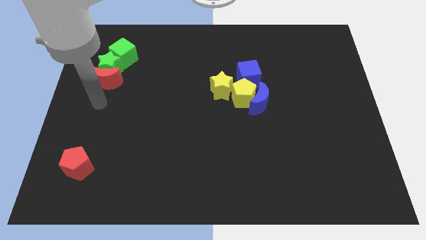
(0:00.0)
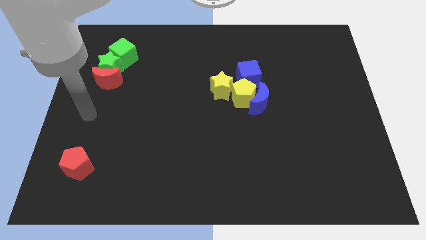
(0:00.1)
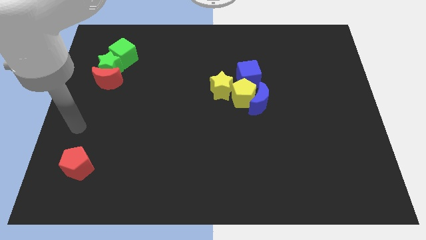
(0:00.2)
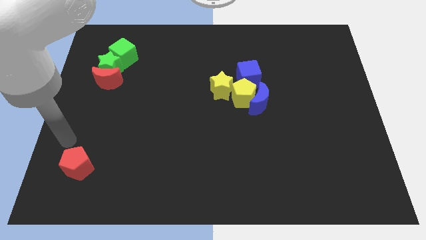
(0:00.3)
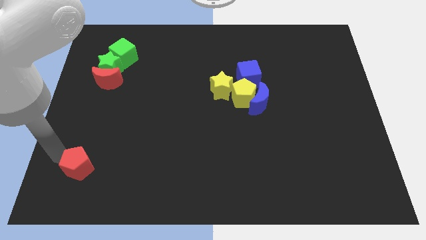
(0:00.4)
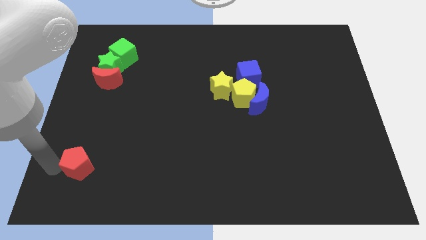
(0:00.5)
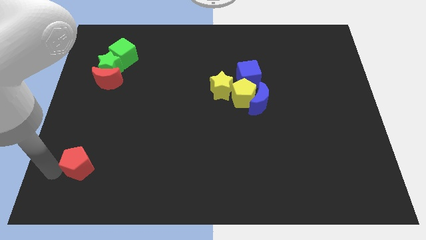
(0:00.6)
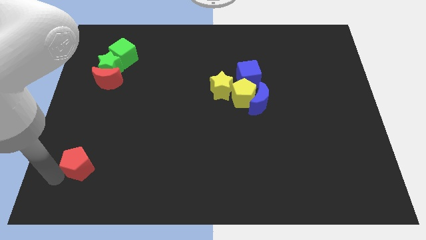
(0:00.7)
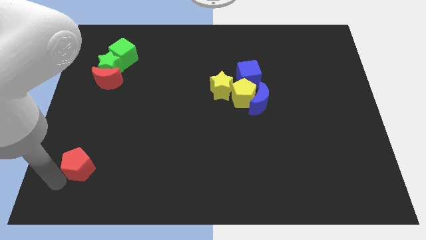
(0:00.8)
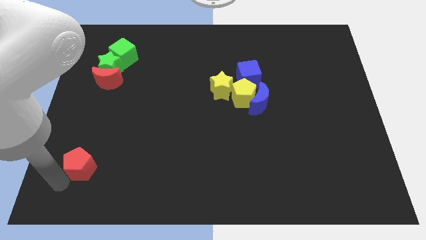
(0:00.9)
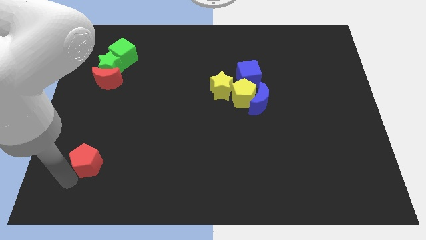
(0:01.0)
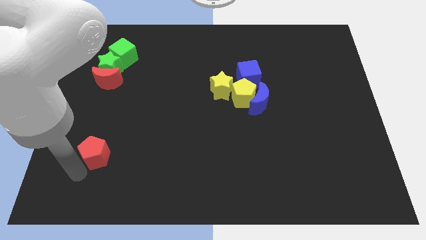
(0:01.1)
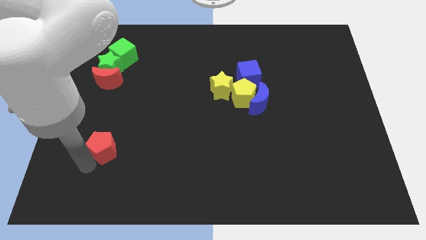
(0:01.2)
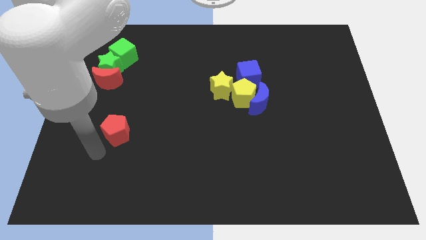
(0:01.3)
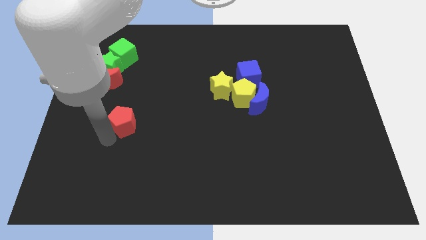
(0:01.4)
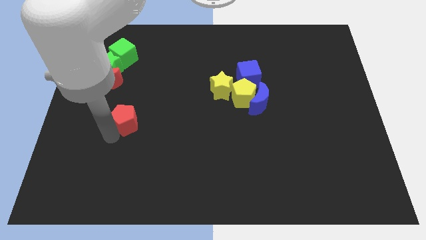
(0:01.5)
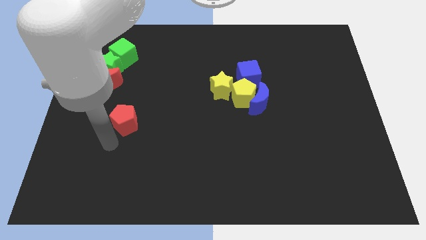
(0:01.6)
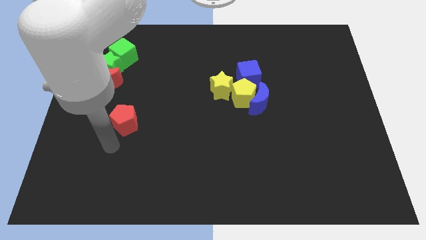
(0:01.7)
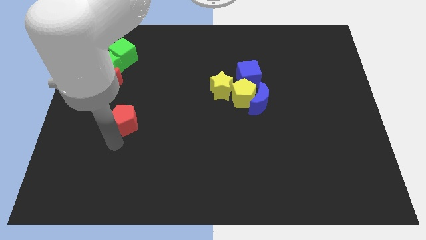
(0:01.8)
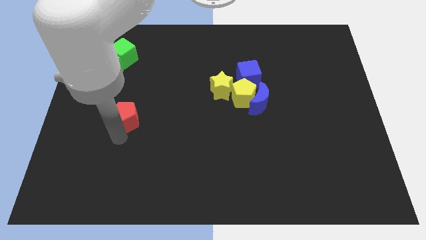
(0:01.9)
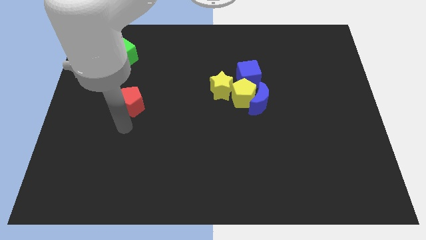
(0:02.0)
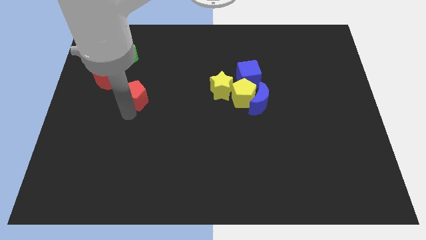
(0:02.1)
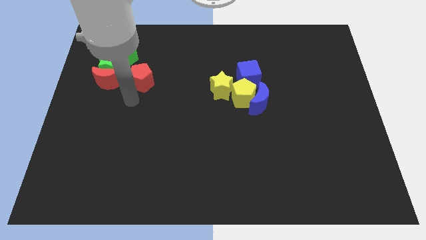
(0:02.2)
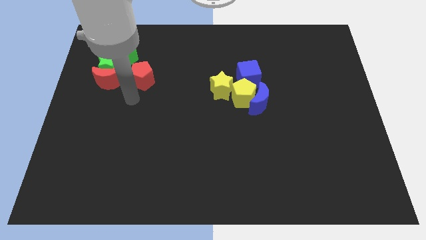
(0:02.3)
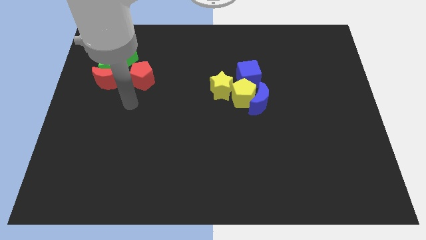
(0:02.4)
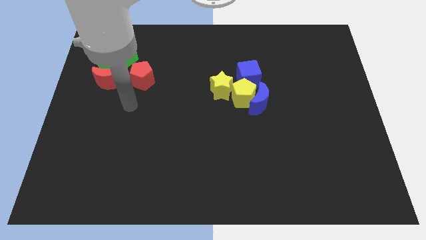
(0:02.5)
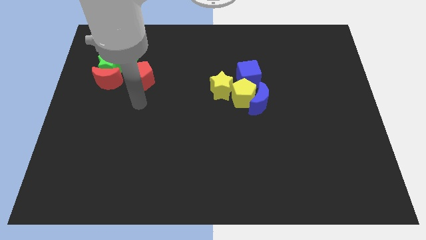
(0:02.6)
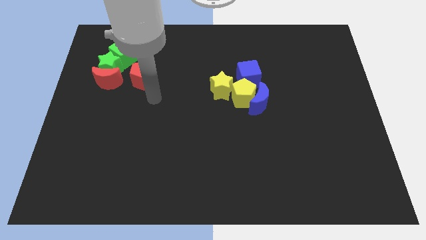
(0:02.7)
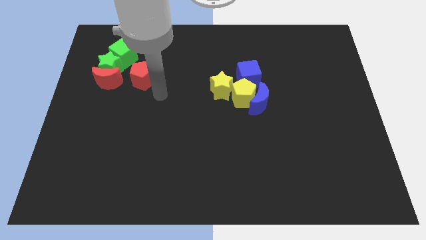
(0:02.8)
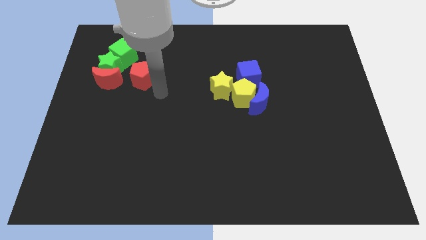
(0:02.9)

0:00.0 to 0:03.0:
place the red pentagon to the right side of the red moon

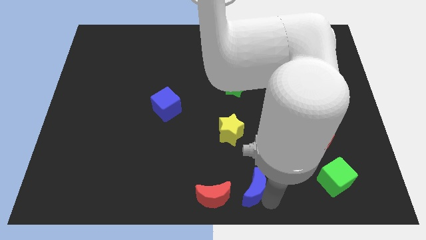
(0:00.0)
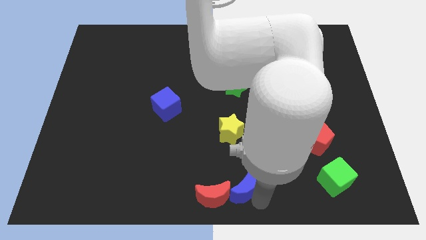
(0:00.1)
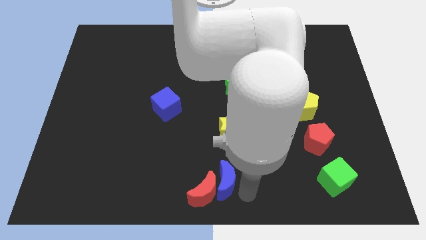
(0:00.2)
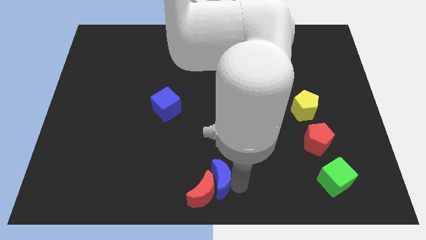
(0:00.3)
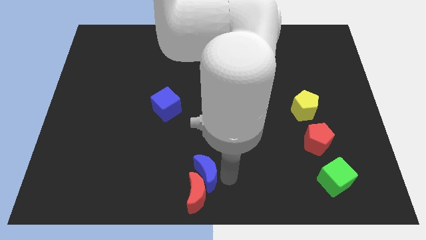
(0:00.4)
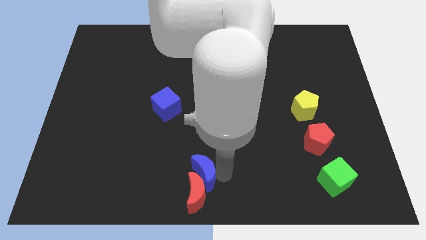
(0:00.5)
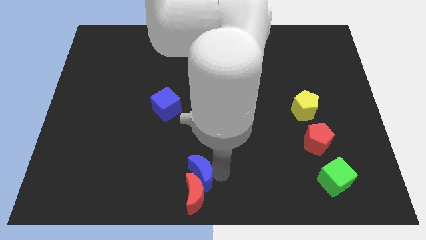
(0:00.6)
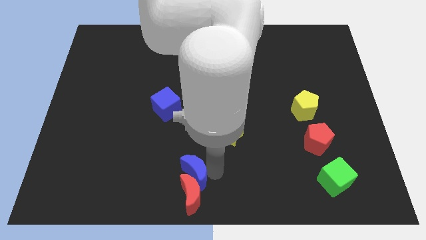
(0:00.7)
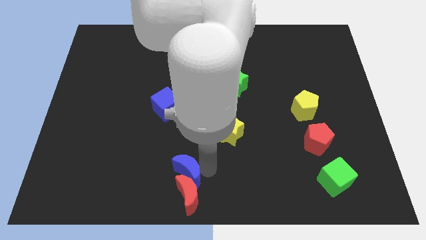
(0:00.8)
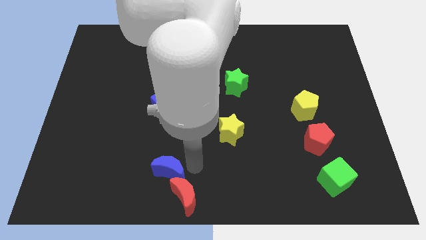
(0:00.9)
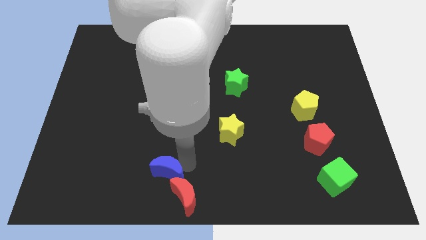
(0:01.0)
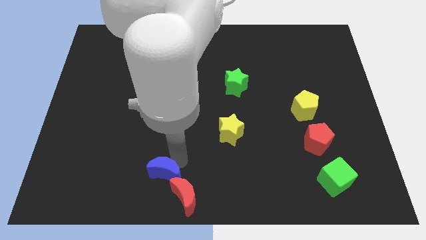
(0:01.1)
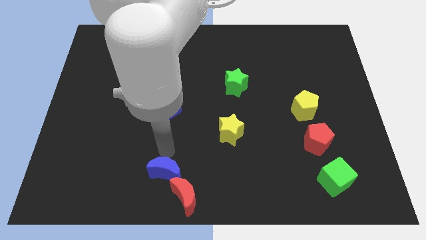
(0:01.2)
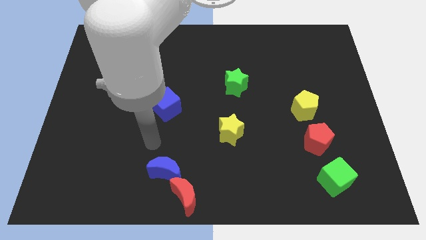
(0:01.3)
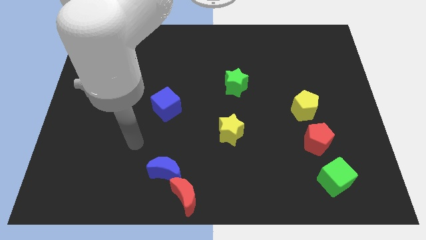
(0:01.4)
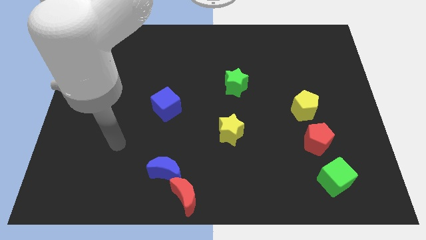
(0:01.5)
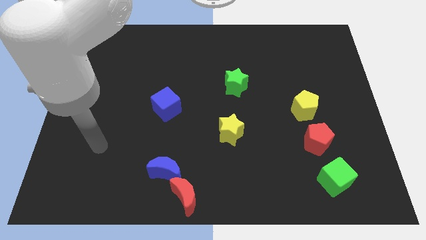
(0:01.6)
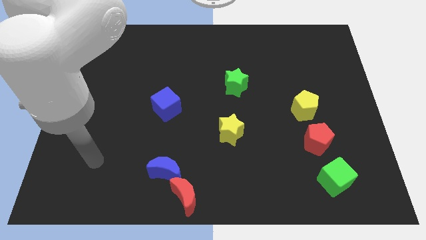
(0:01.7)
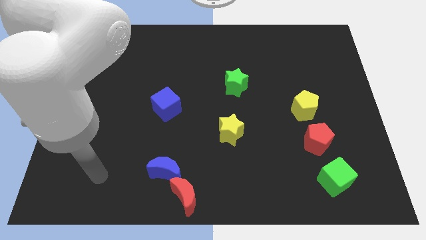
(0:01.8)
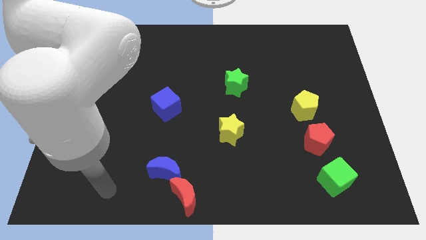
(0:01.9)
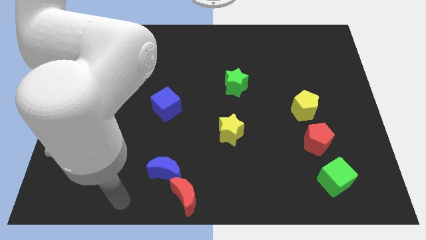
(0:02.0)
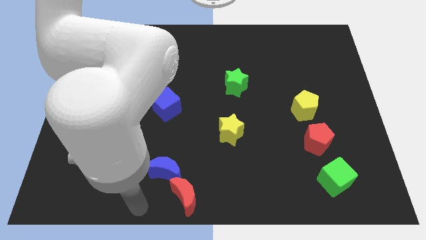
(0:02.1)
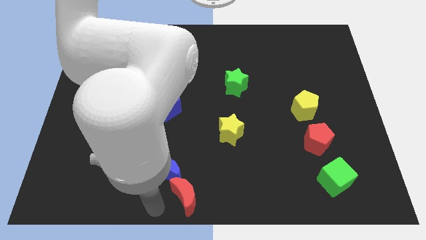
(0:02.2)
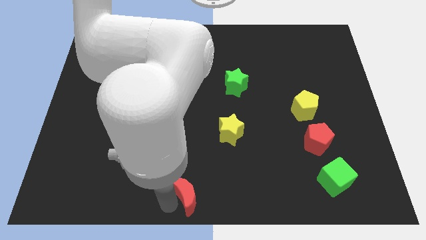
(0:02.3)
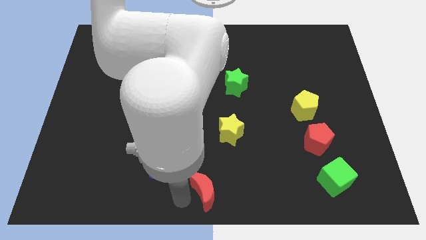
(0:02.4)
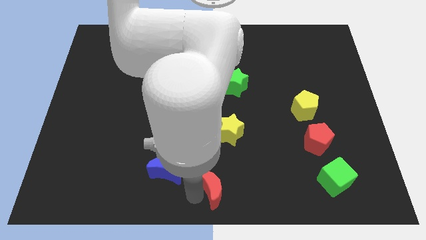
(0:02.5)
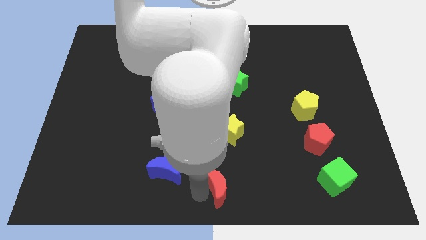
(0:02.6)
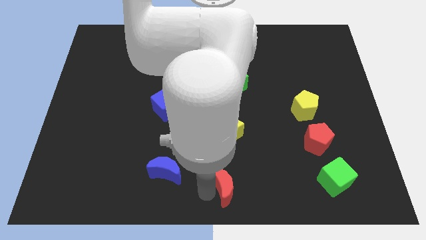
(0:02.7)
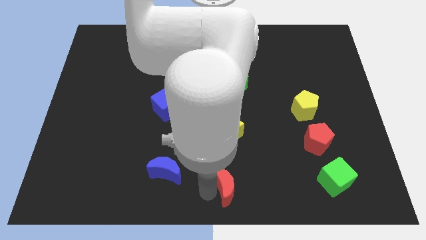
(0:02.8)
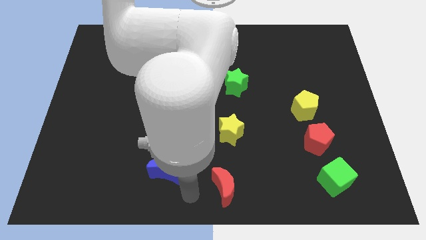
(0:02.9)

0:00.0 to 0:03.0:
separate red moon from blue moon

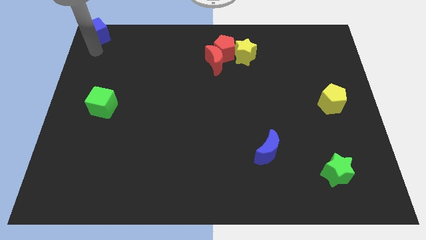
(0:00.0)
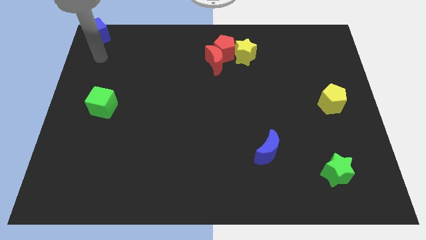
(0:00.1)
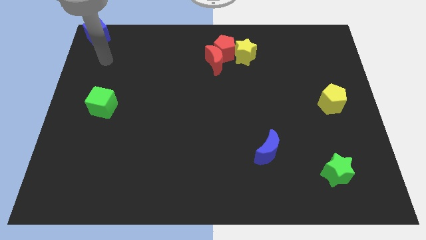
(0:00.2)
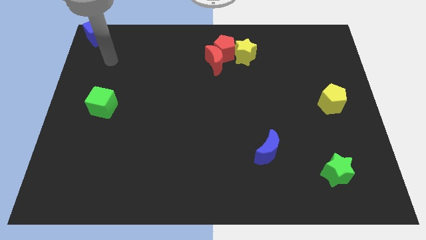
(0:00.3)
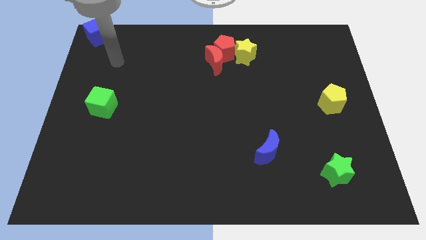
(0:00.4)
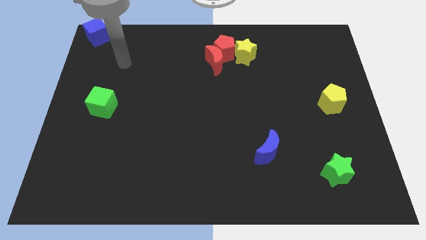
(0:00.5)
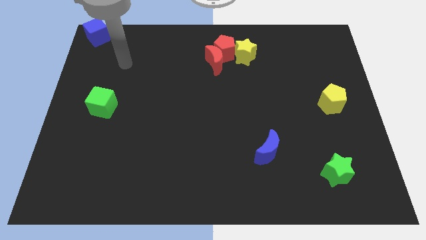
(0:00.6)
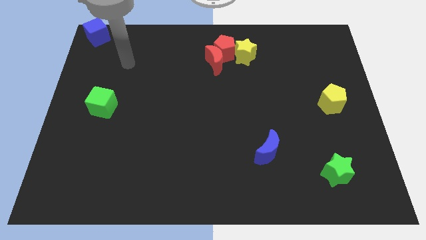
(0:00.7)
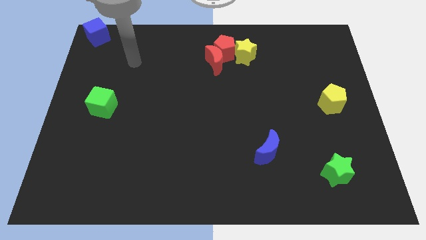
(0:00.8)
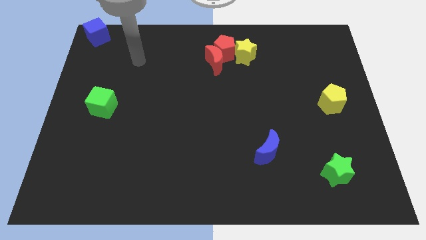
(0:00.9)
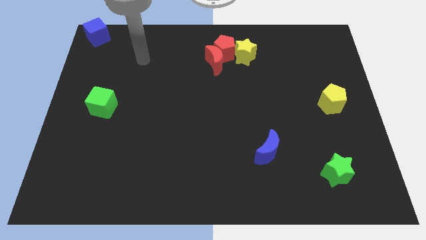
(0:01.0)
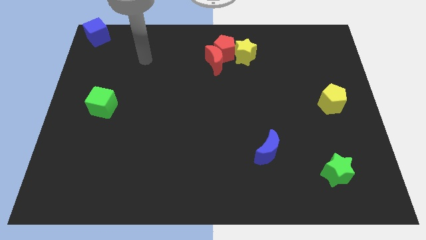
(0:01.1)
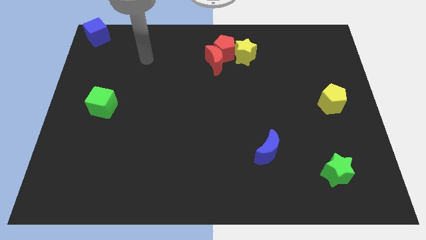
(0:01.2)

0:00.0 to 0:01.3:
move the arm away from the blue cube

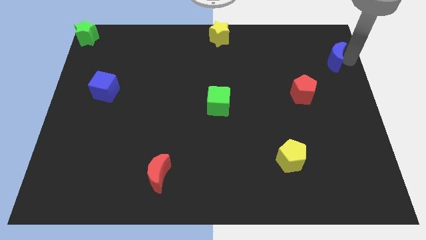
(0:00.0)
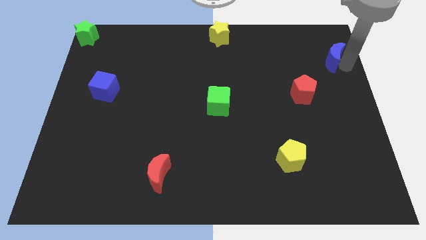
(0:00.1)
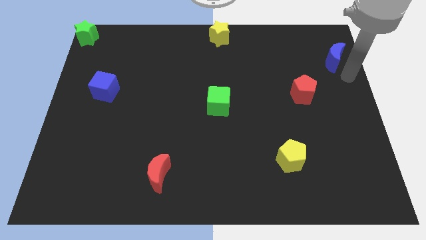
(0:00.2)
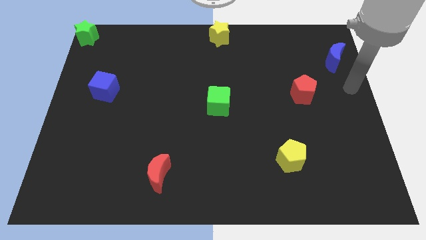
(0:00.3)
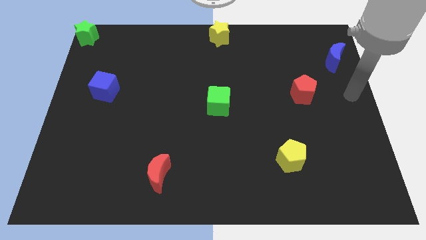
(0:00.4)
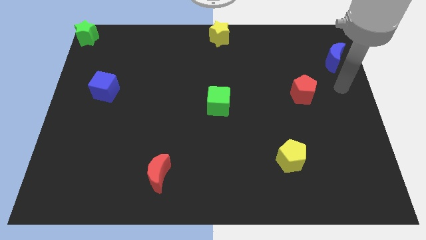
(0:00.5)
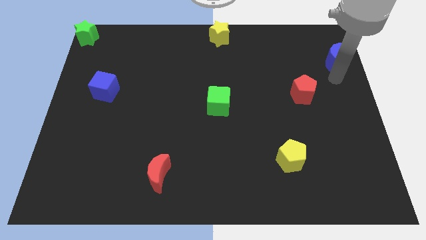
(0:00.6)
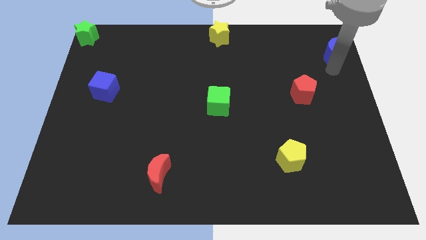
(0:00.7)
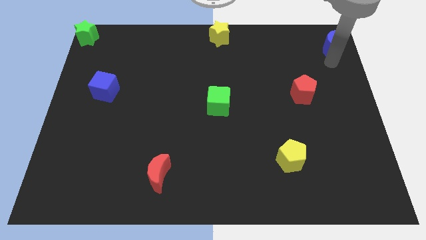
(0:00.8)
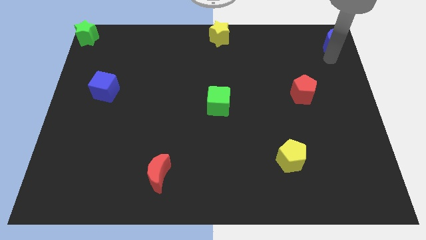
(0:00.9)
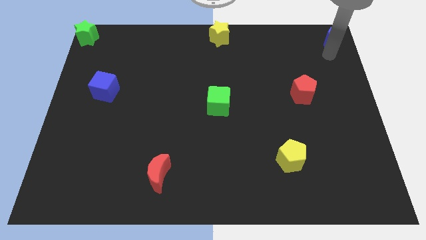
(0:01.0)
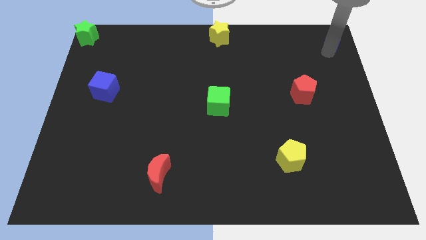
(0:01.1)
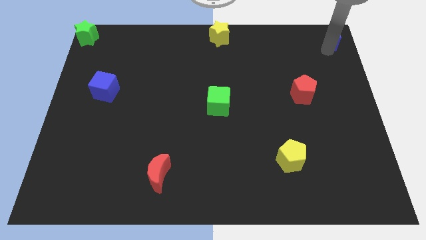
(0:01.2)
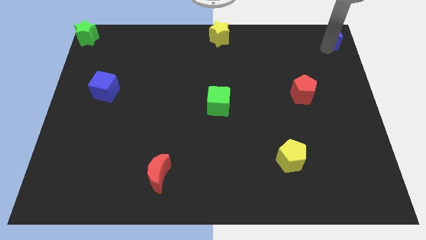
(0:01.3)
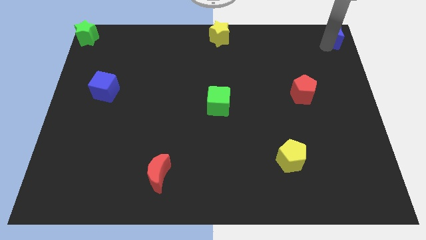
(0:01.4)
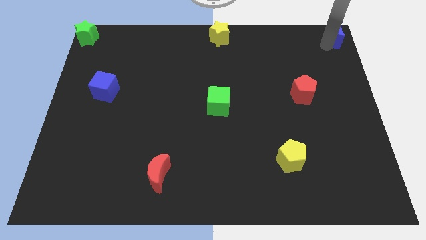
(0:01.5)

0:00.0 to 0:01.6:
move the blue moon to the top right

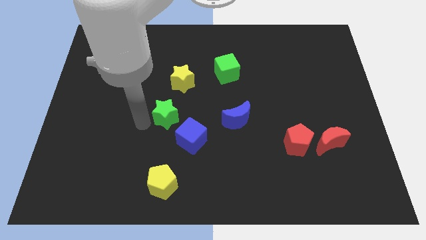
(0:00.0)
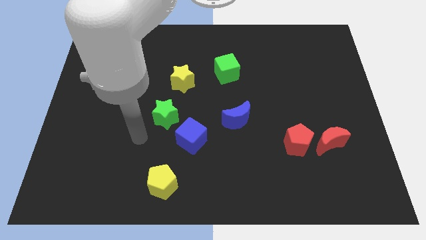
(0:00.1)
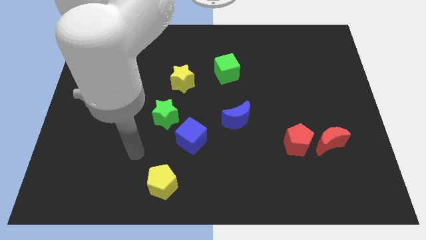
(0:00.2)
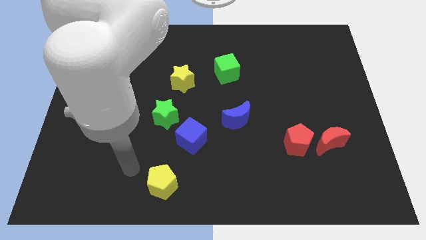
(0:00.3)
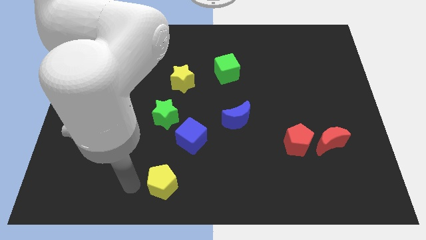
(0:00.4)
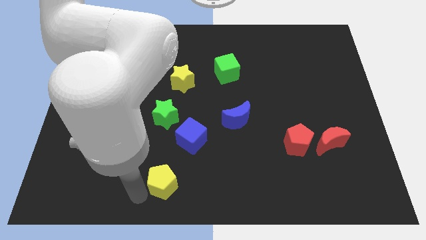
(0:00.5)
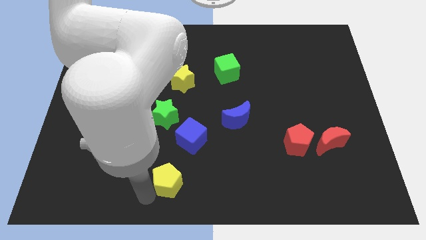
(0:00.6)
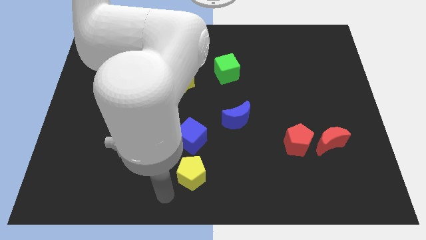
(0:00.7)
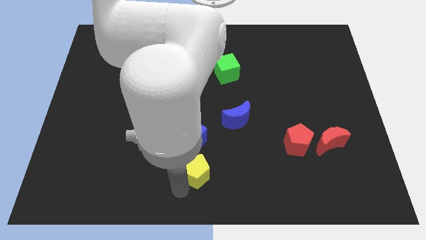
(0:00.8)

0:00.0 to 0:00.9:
put the yellow pentagon below the blue cube
